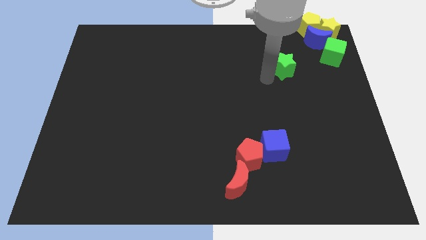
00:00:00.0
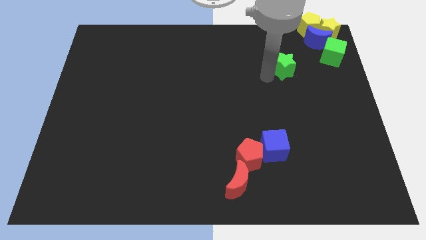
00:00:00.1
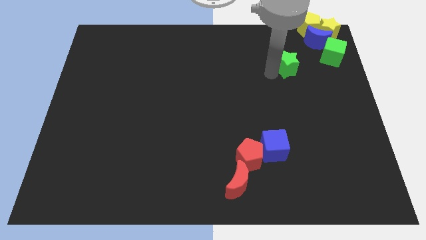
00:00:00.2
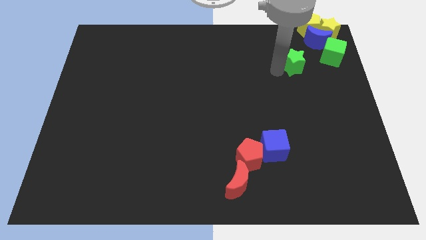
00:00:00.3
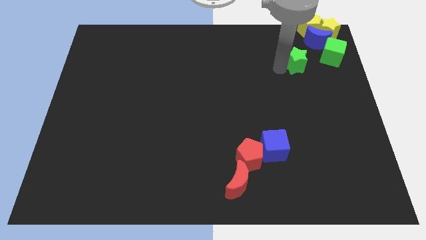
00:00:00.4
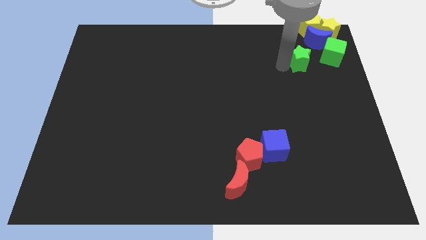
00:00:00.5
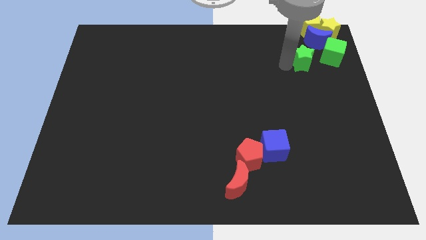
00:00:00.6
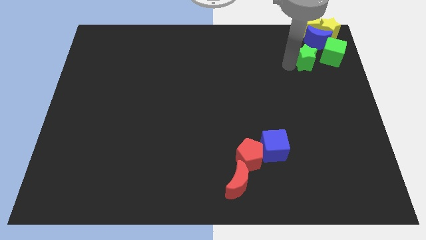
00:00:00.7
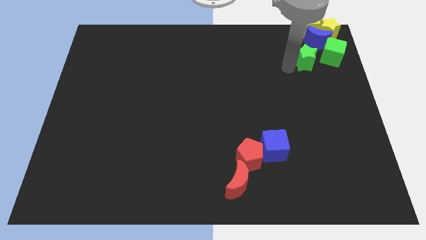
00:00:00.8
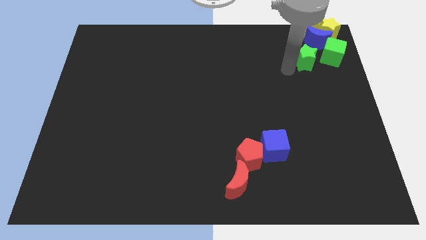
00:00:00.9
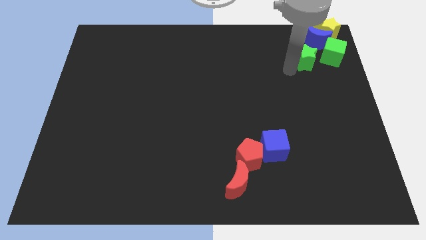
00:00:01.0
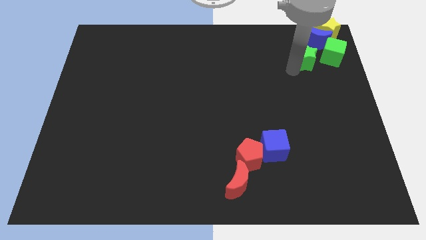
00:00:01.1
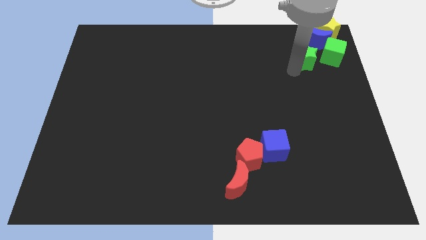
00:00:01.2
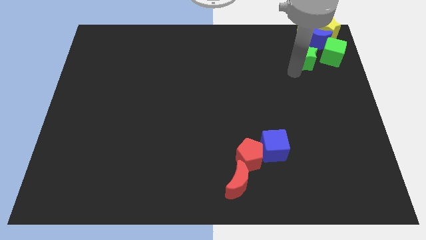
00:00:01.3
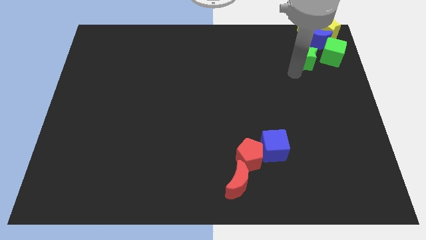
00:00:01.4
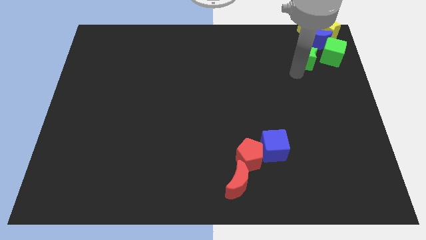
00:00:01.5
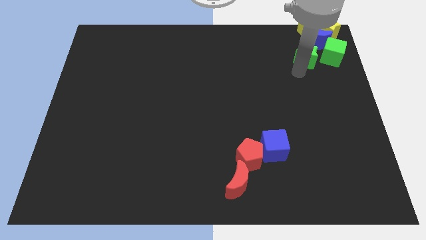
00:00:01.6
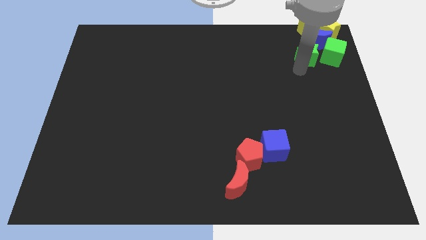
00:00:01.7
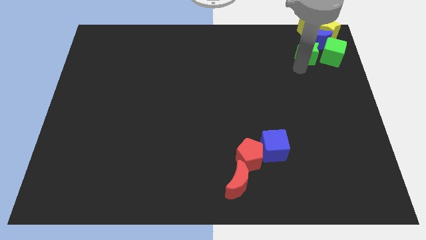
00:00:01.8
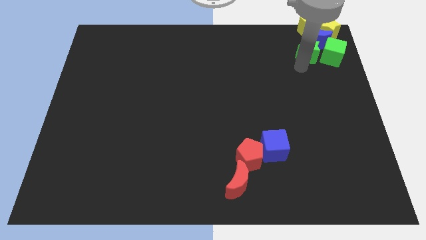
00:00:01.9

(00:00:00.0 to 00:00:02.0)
drag the green star to the left side of the green cube

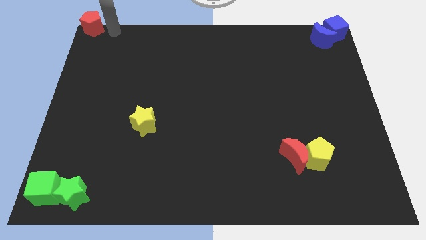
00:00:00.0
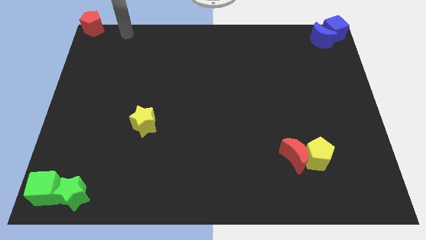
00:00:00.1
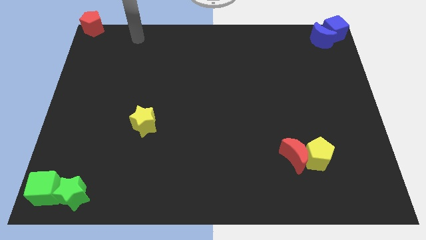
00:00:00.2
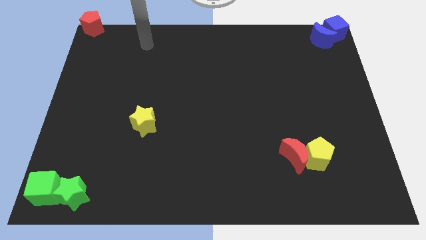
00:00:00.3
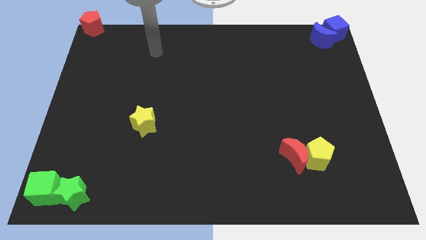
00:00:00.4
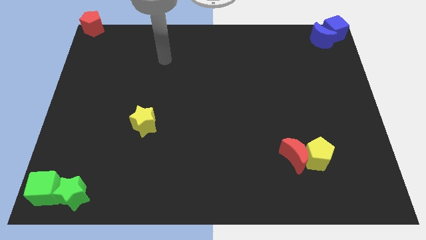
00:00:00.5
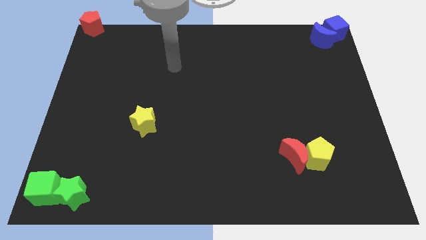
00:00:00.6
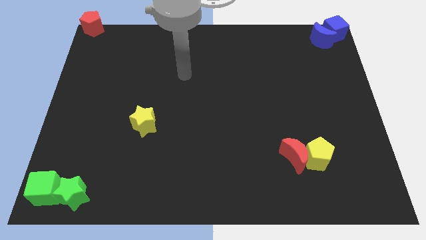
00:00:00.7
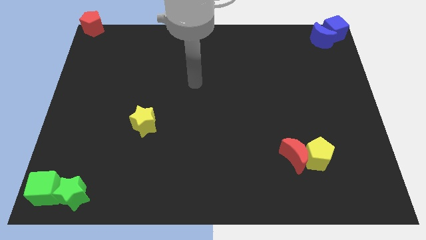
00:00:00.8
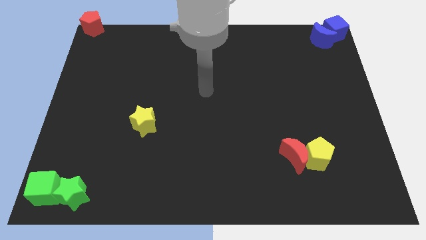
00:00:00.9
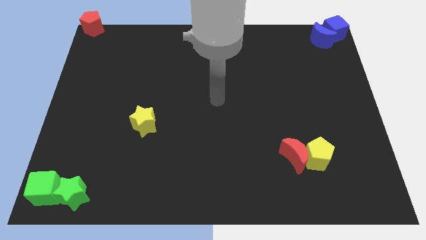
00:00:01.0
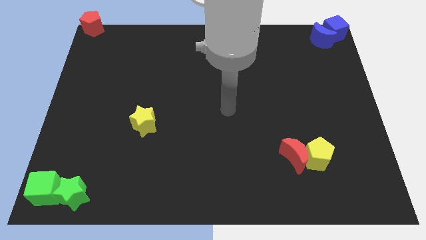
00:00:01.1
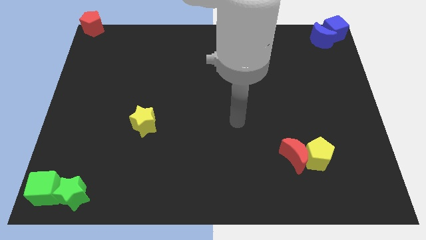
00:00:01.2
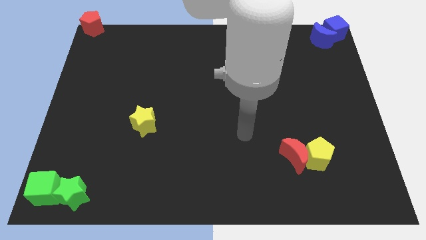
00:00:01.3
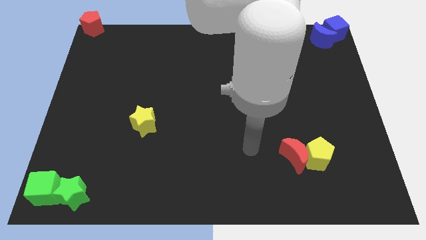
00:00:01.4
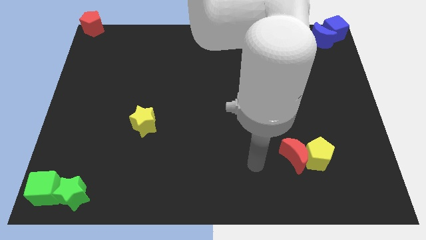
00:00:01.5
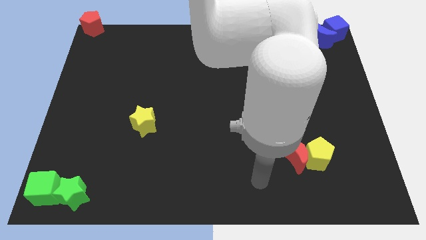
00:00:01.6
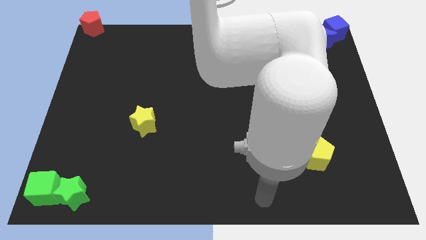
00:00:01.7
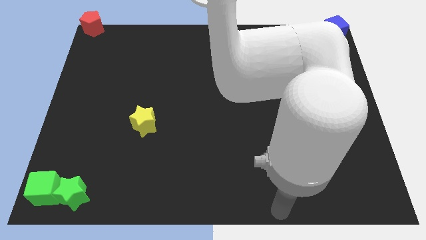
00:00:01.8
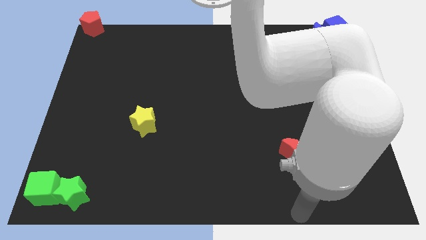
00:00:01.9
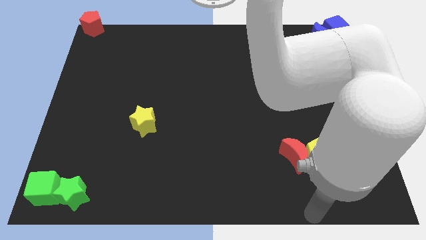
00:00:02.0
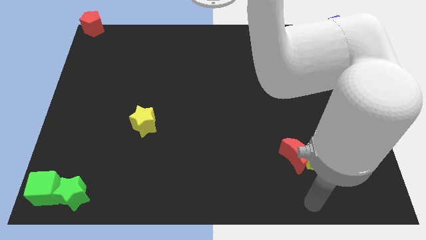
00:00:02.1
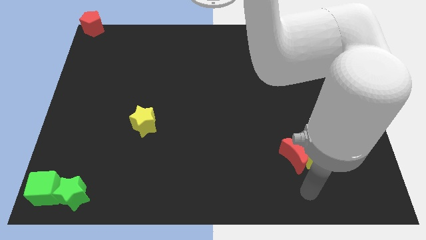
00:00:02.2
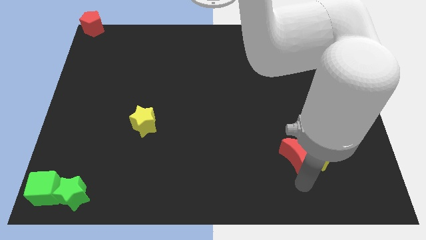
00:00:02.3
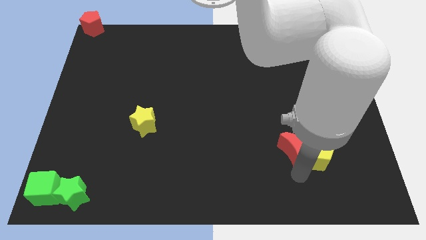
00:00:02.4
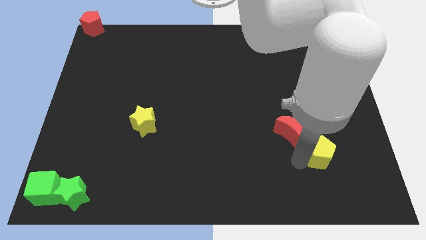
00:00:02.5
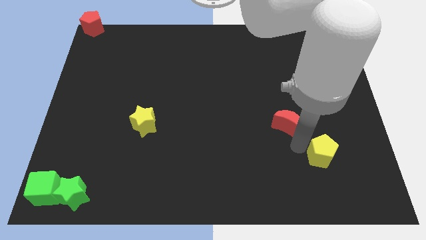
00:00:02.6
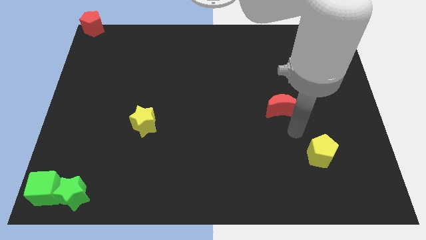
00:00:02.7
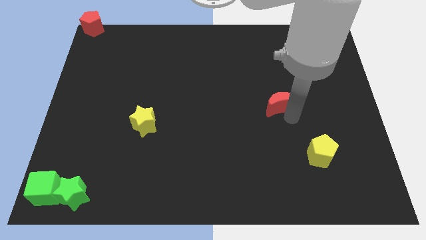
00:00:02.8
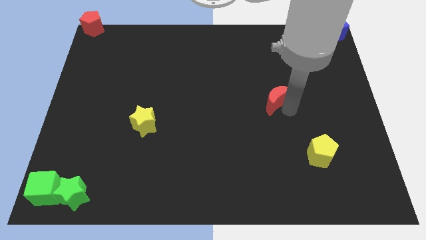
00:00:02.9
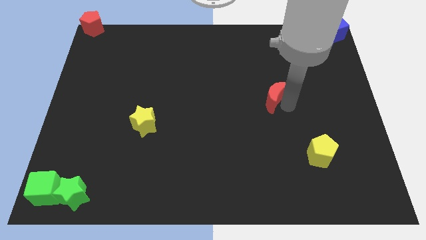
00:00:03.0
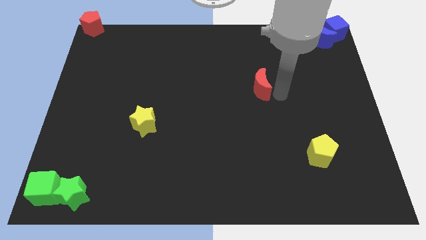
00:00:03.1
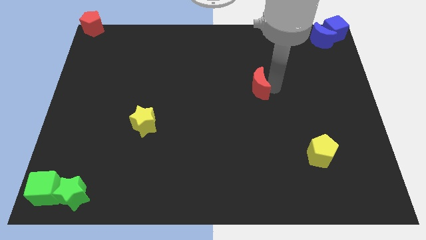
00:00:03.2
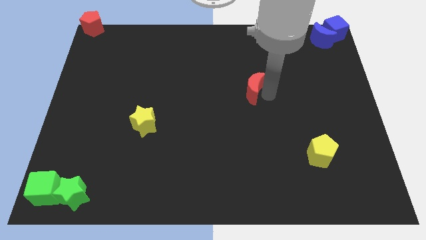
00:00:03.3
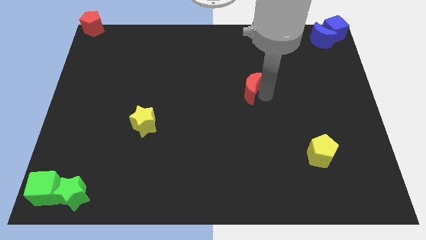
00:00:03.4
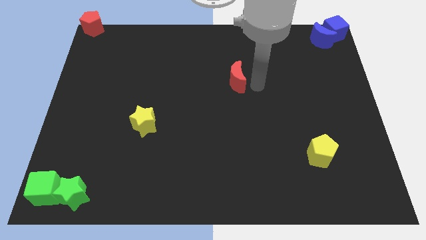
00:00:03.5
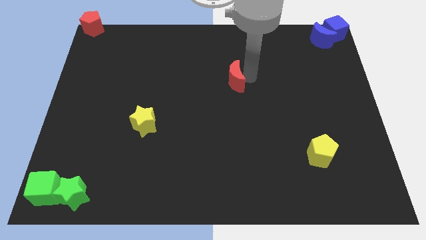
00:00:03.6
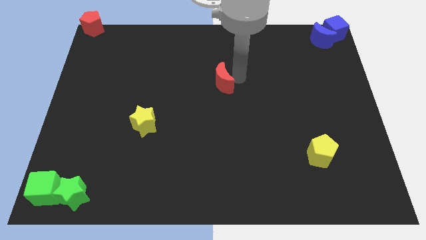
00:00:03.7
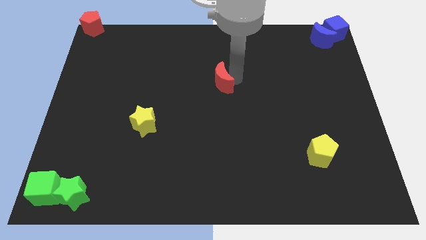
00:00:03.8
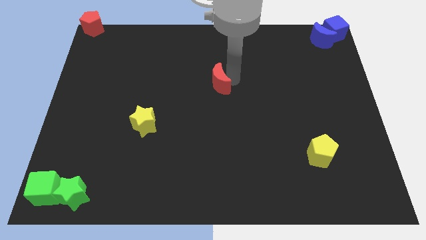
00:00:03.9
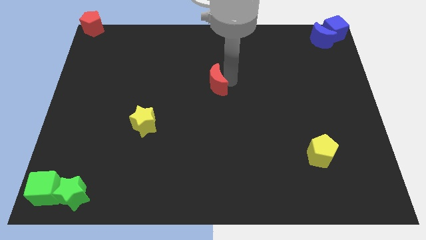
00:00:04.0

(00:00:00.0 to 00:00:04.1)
move the red crescent away from the yellow pentagon

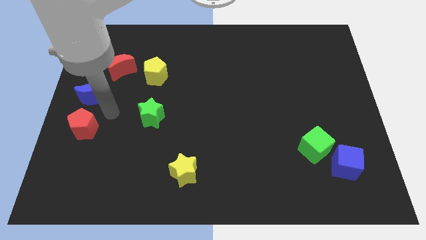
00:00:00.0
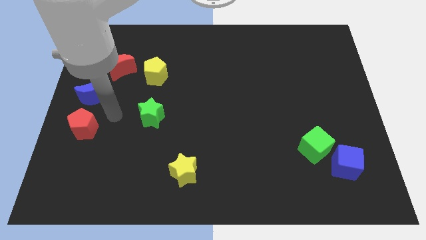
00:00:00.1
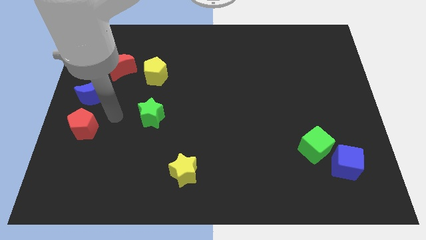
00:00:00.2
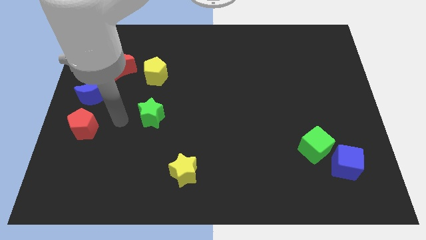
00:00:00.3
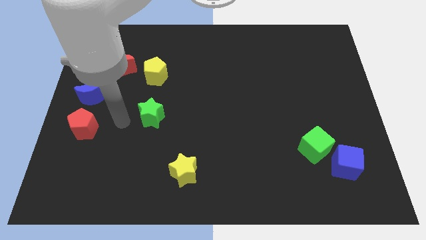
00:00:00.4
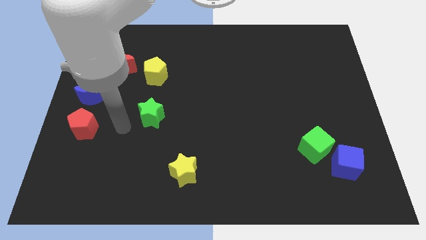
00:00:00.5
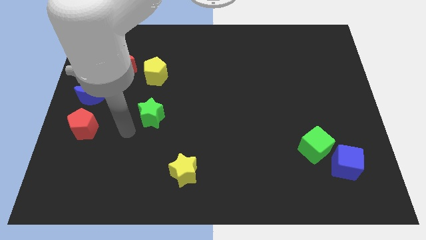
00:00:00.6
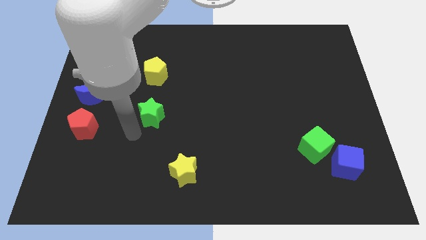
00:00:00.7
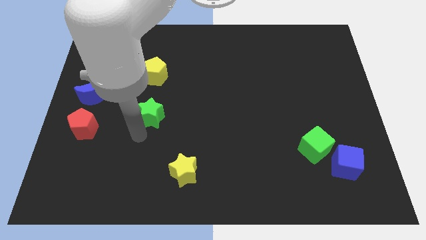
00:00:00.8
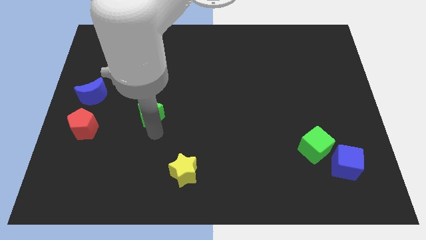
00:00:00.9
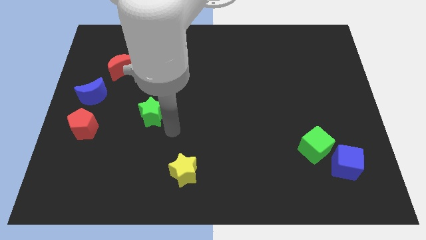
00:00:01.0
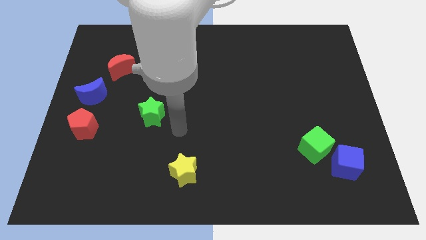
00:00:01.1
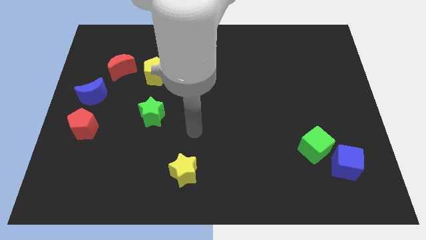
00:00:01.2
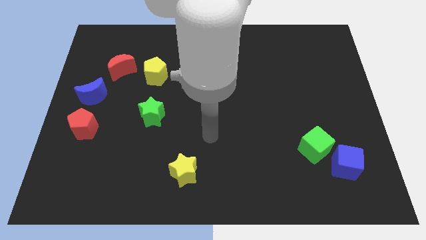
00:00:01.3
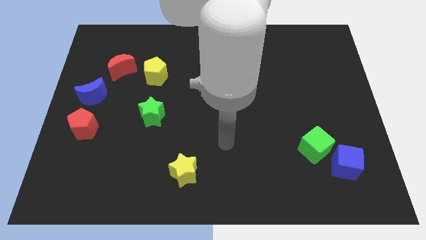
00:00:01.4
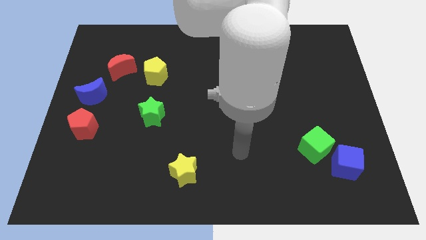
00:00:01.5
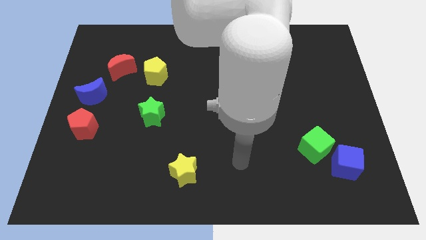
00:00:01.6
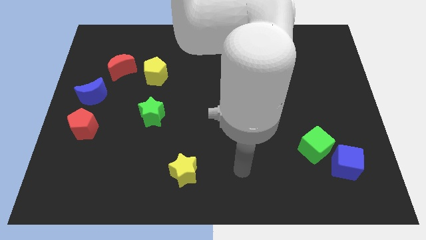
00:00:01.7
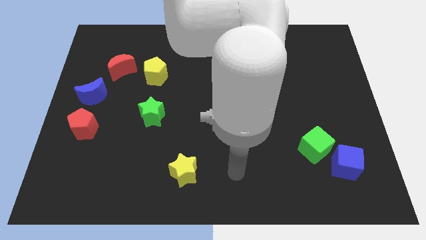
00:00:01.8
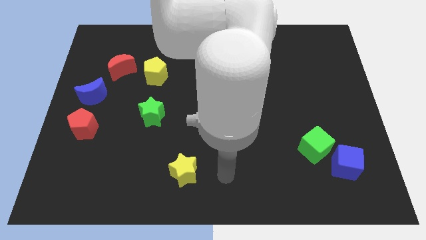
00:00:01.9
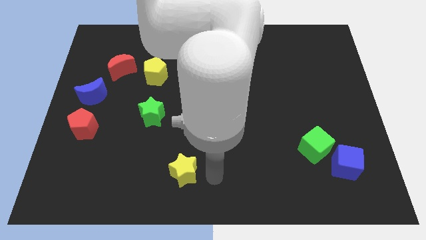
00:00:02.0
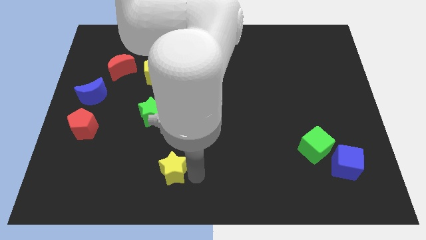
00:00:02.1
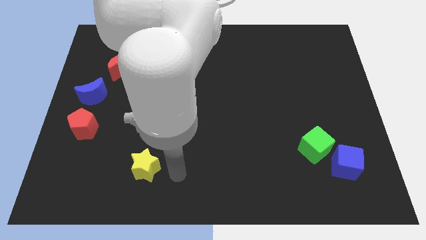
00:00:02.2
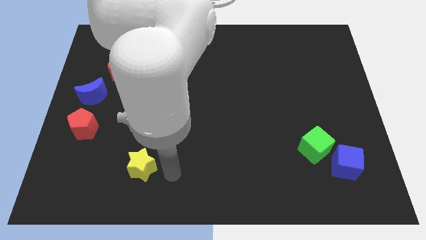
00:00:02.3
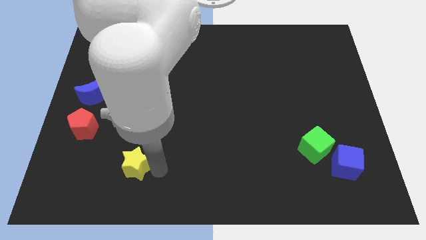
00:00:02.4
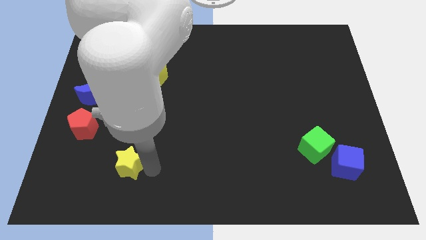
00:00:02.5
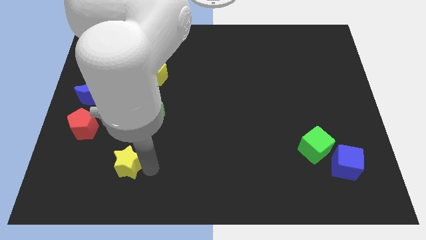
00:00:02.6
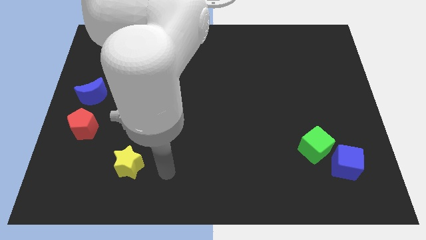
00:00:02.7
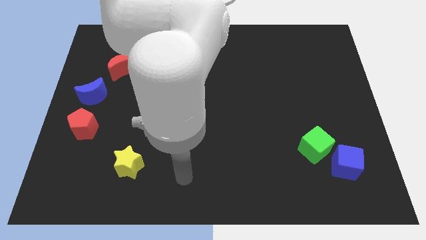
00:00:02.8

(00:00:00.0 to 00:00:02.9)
move the yellow star to the bottom left of the green star
